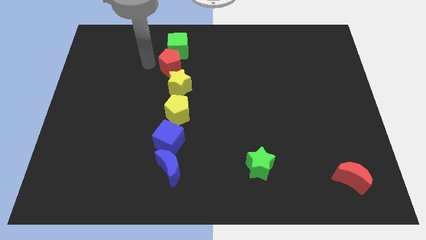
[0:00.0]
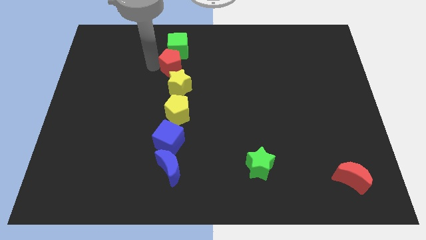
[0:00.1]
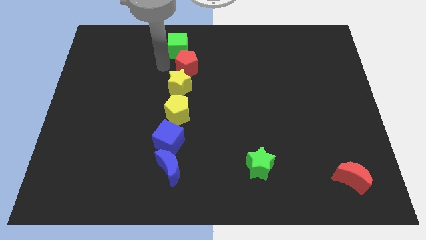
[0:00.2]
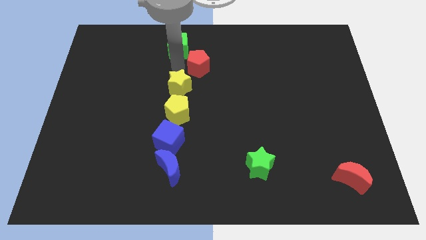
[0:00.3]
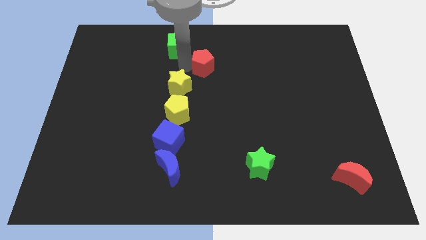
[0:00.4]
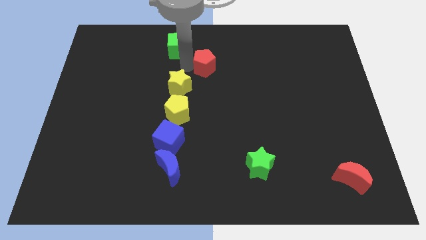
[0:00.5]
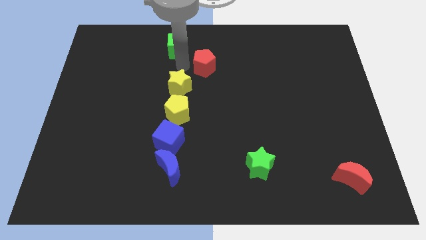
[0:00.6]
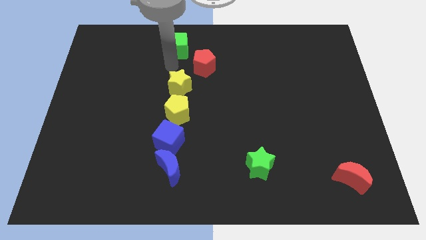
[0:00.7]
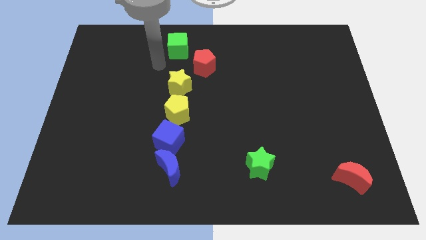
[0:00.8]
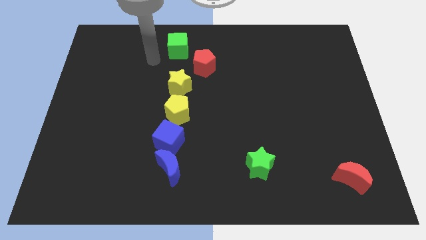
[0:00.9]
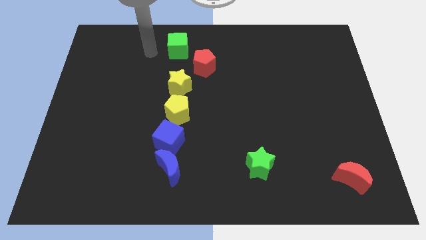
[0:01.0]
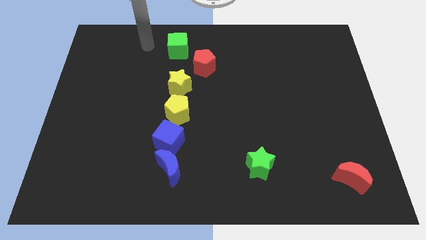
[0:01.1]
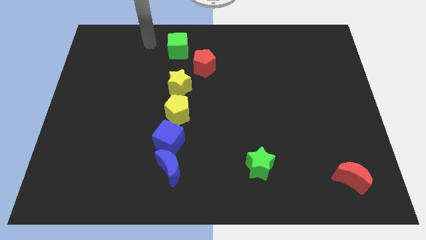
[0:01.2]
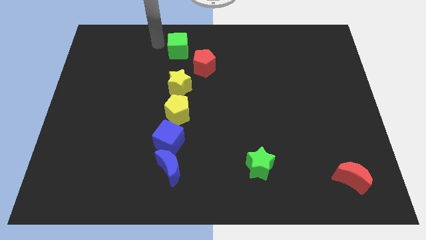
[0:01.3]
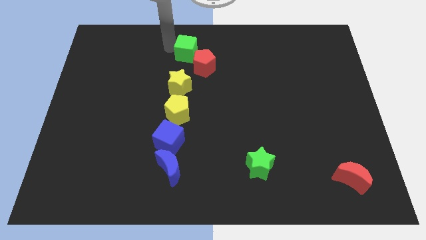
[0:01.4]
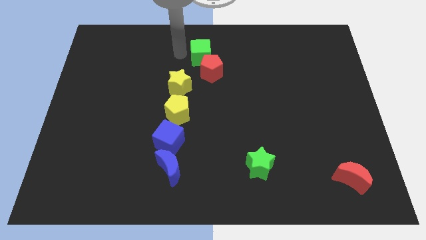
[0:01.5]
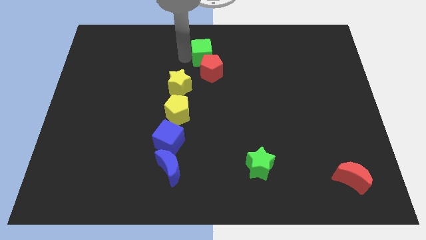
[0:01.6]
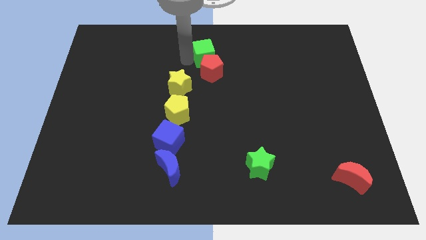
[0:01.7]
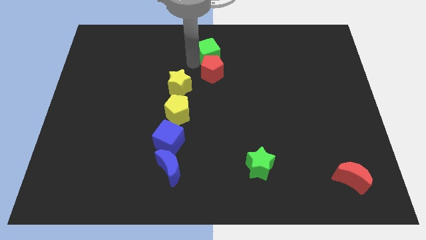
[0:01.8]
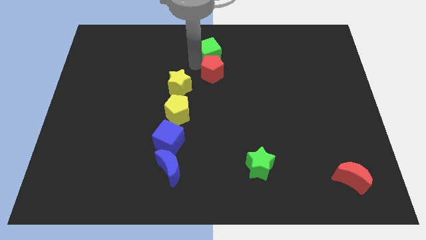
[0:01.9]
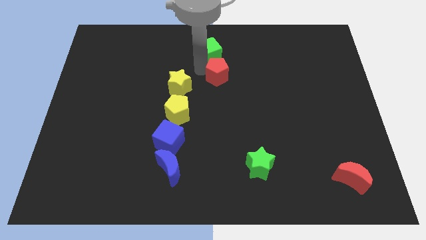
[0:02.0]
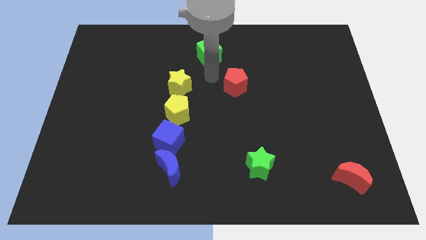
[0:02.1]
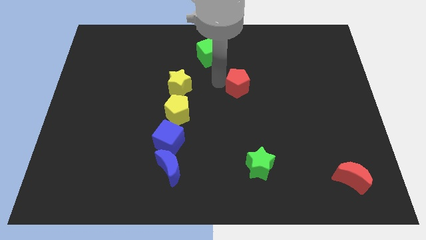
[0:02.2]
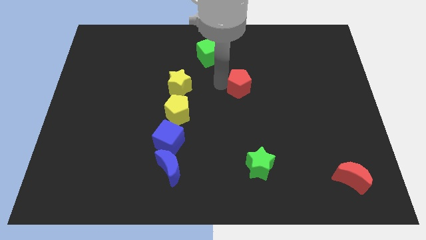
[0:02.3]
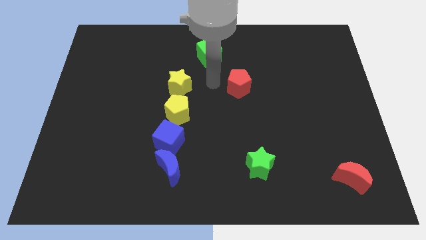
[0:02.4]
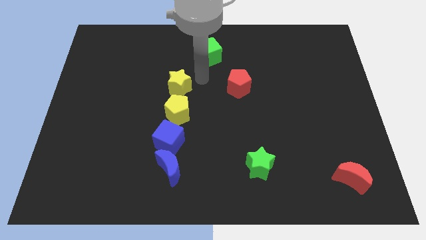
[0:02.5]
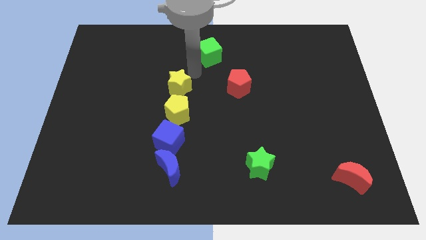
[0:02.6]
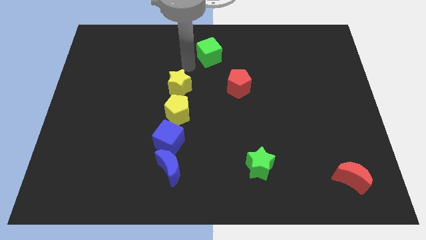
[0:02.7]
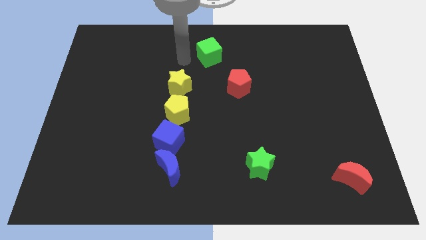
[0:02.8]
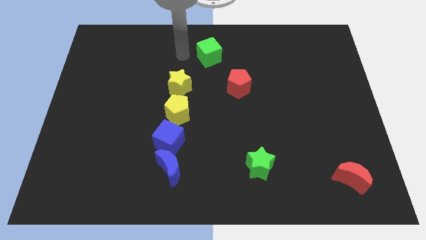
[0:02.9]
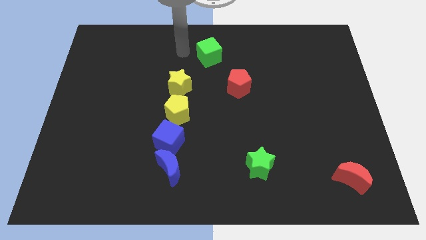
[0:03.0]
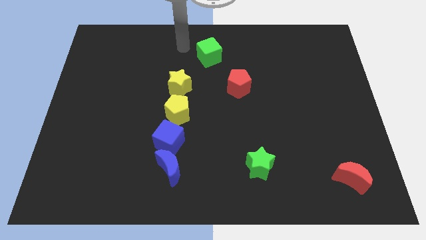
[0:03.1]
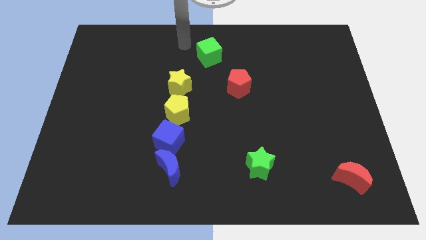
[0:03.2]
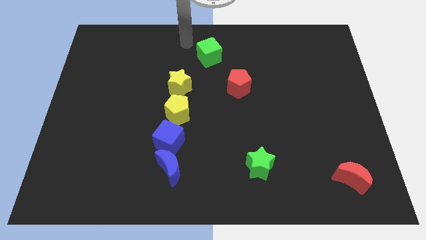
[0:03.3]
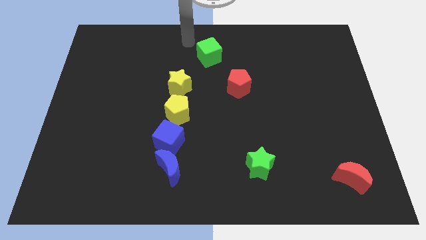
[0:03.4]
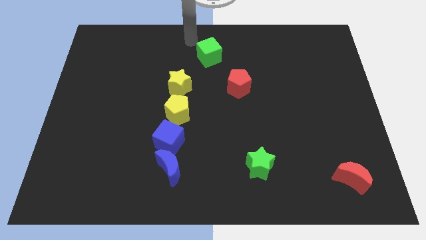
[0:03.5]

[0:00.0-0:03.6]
separate the red pentagon from the green cube

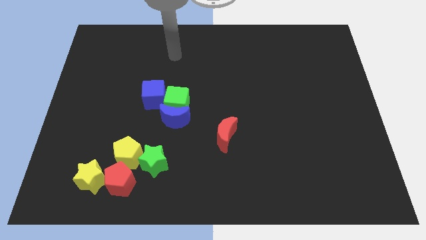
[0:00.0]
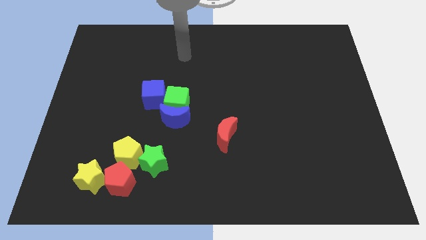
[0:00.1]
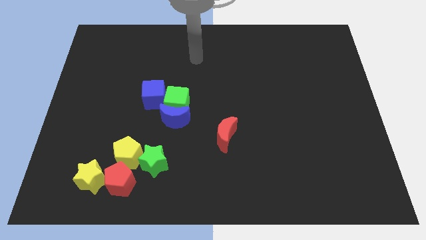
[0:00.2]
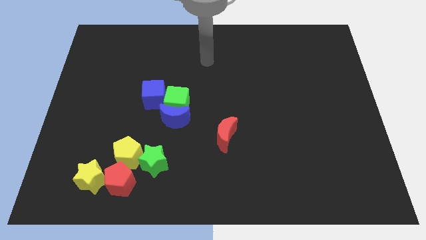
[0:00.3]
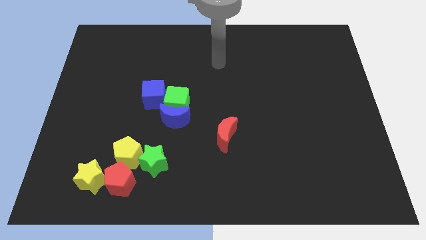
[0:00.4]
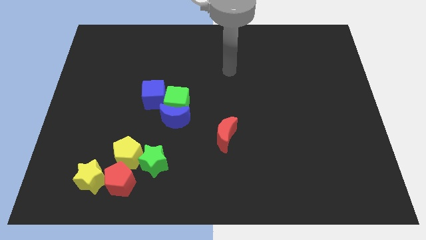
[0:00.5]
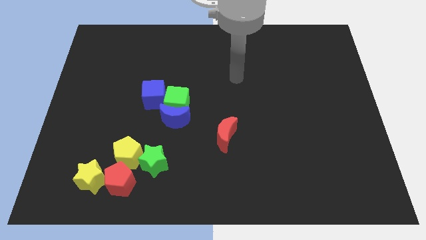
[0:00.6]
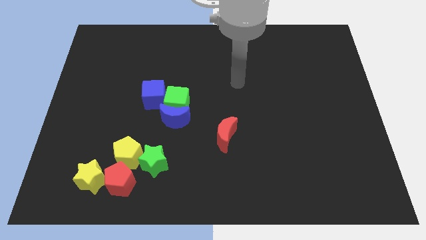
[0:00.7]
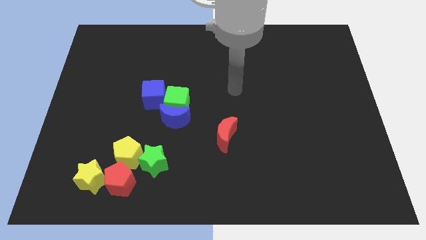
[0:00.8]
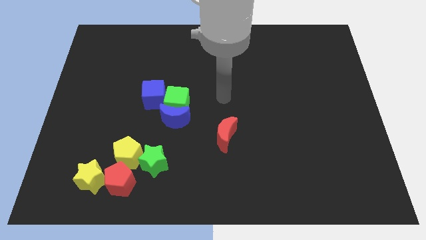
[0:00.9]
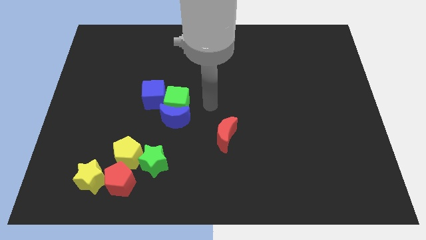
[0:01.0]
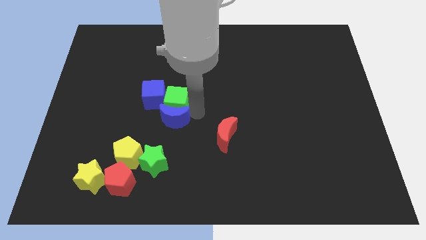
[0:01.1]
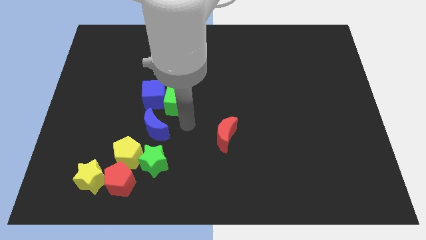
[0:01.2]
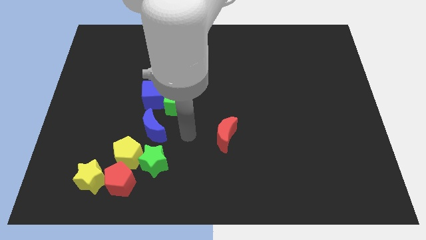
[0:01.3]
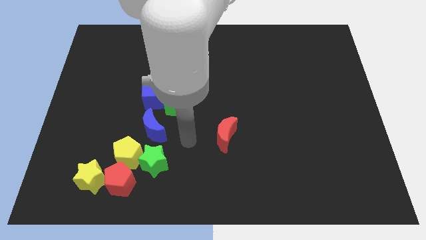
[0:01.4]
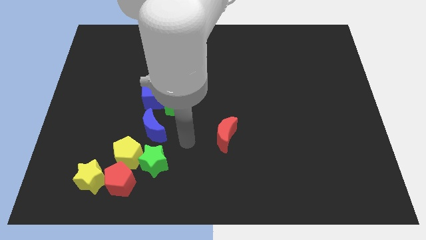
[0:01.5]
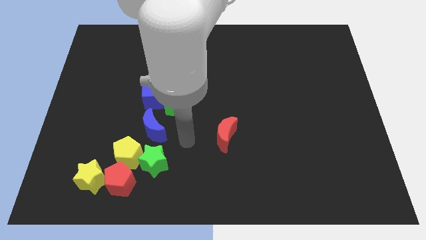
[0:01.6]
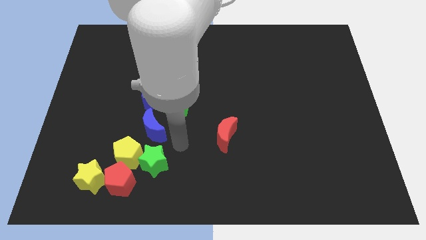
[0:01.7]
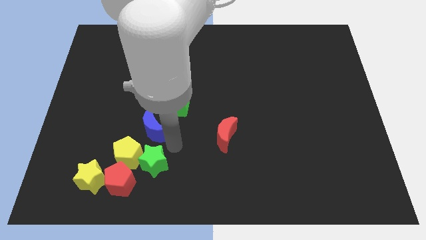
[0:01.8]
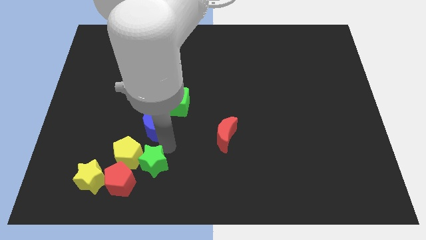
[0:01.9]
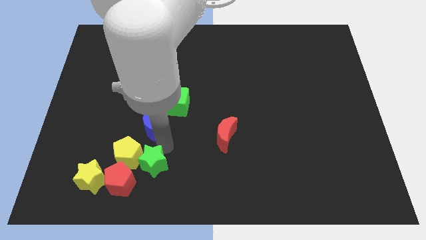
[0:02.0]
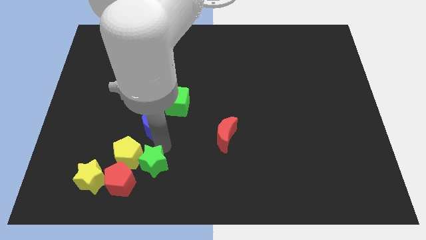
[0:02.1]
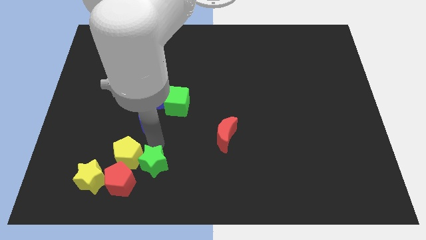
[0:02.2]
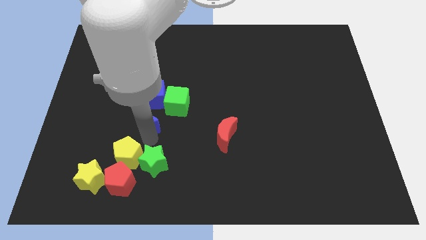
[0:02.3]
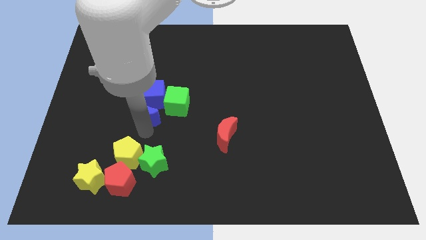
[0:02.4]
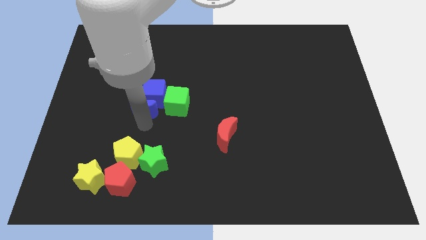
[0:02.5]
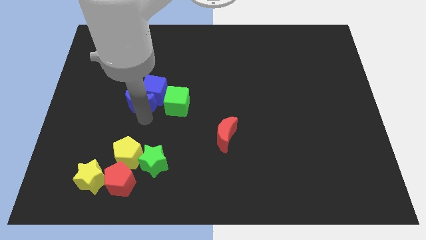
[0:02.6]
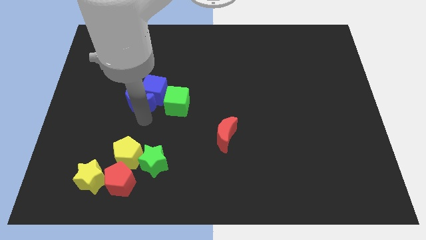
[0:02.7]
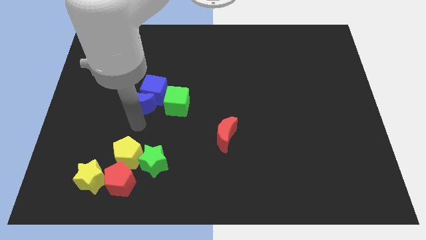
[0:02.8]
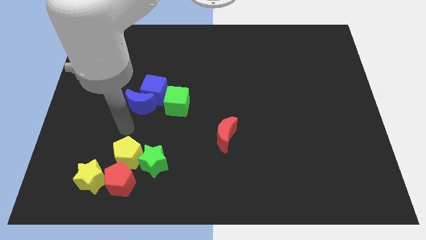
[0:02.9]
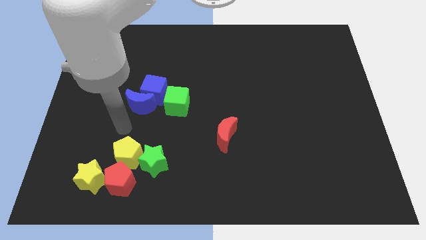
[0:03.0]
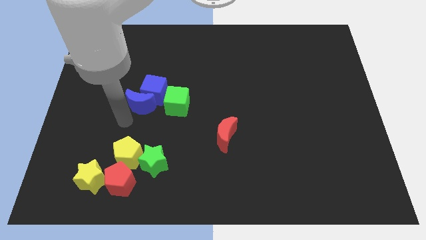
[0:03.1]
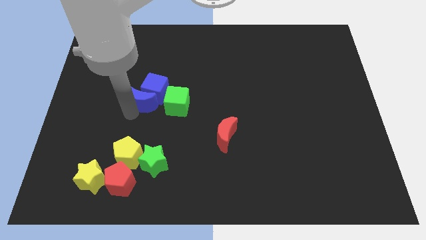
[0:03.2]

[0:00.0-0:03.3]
attach the blue moon with the blue cube

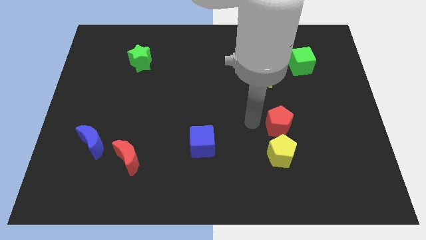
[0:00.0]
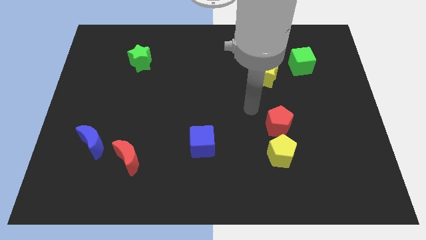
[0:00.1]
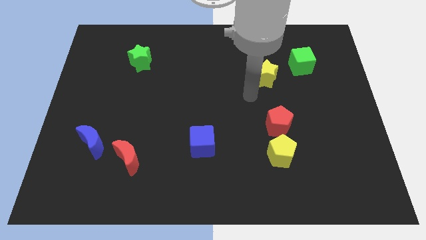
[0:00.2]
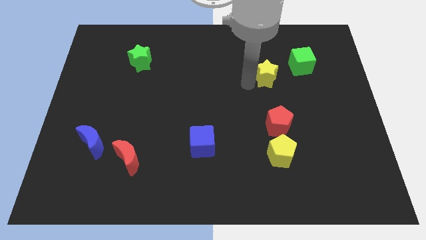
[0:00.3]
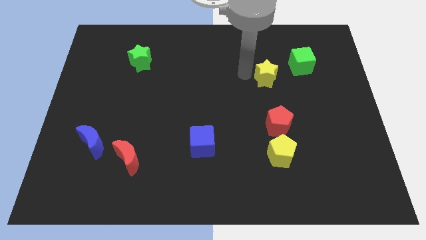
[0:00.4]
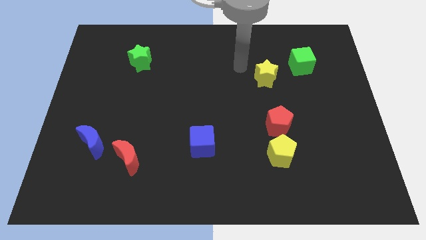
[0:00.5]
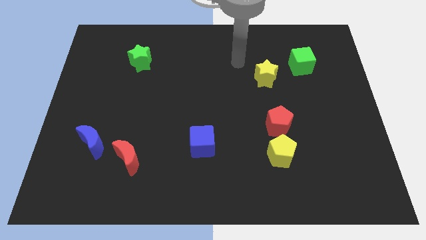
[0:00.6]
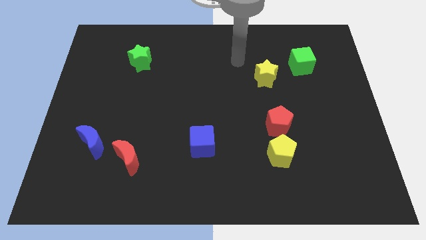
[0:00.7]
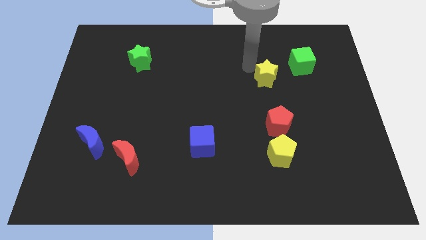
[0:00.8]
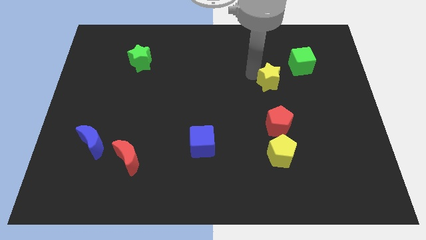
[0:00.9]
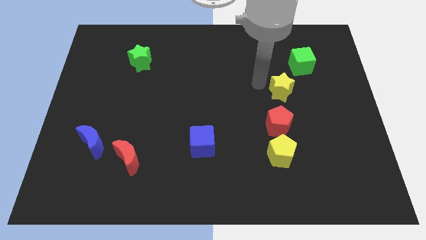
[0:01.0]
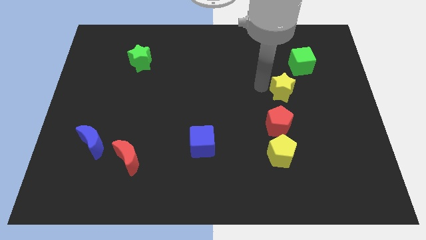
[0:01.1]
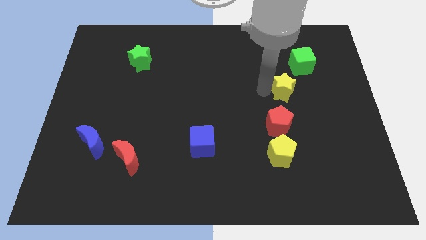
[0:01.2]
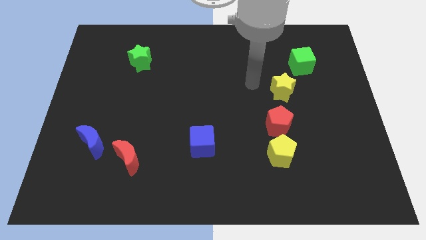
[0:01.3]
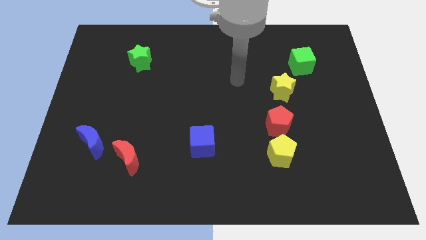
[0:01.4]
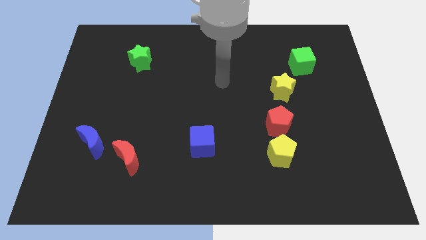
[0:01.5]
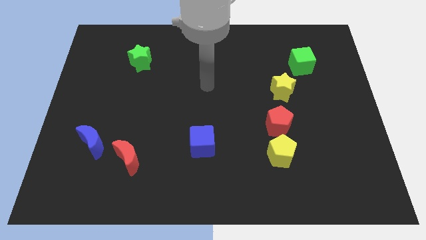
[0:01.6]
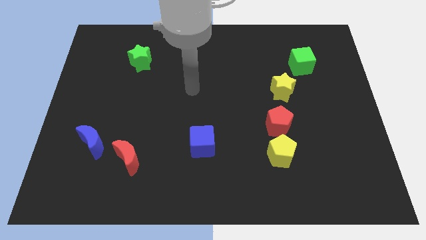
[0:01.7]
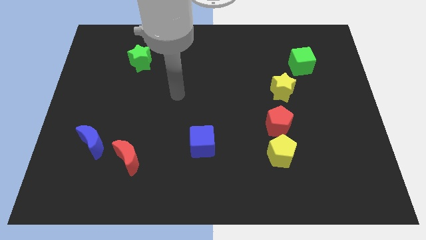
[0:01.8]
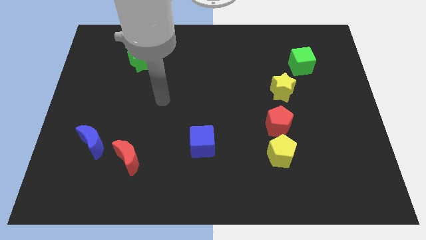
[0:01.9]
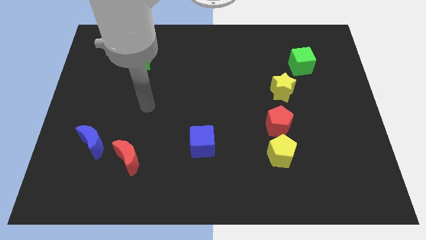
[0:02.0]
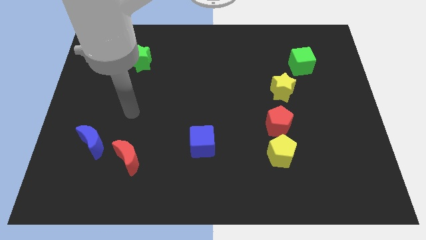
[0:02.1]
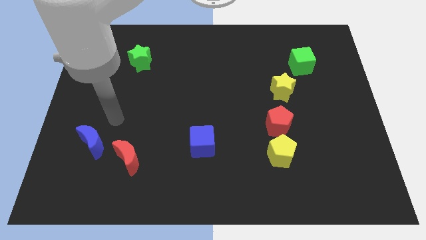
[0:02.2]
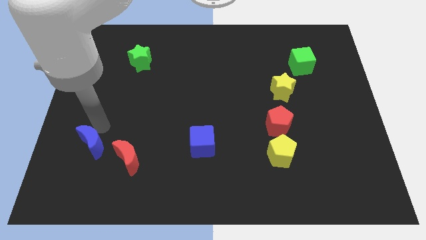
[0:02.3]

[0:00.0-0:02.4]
place the yellow star under the red pentagon
